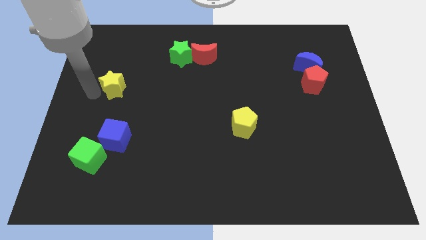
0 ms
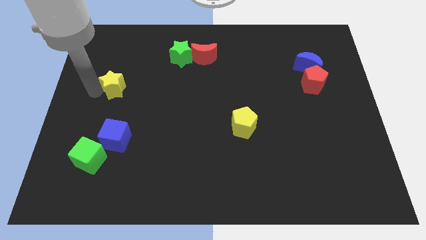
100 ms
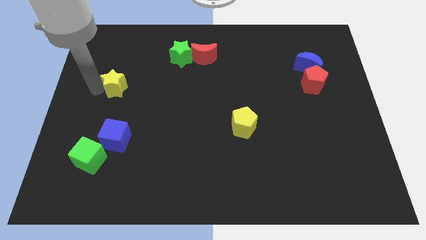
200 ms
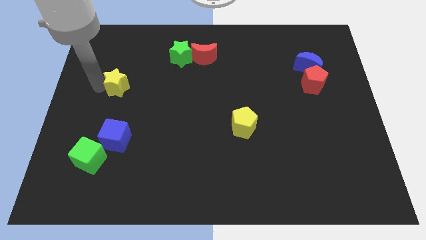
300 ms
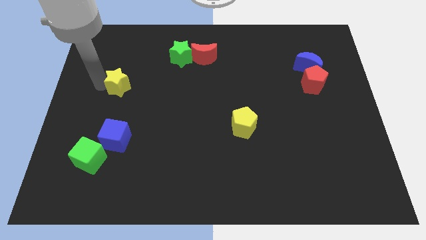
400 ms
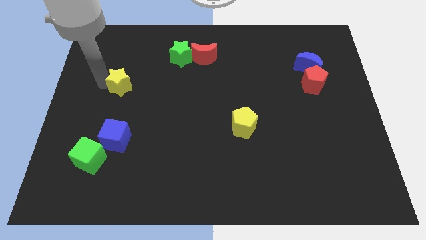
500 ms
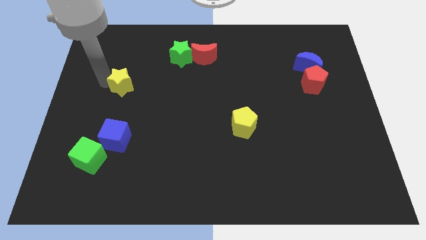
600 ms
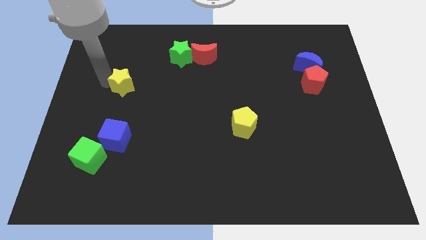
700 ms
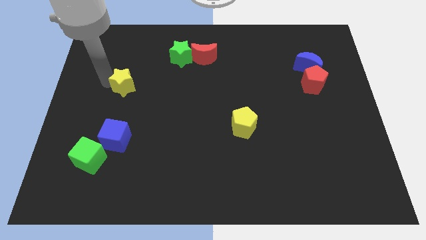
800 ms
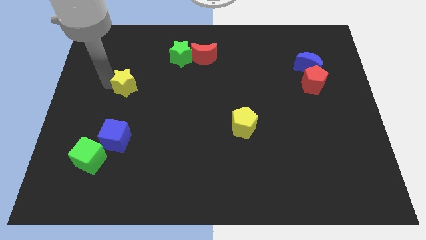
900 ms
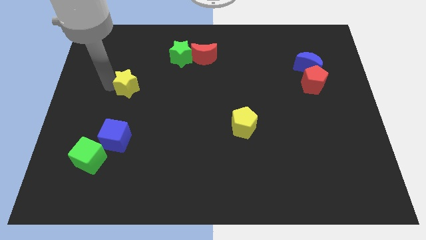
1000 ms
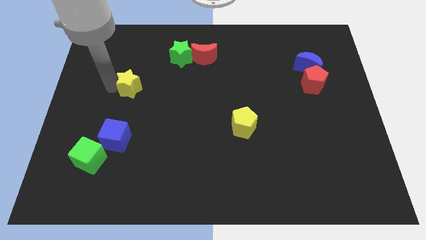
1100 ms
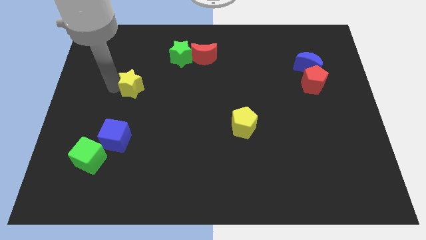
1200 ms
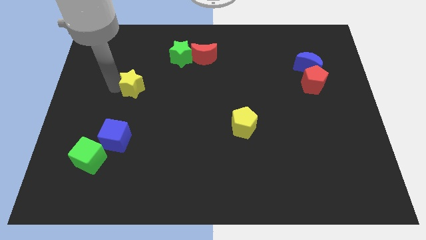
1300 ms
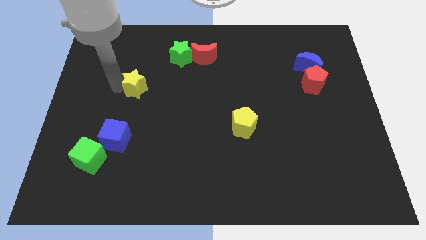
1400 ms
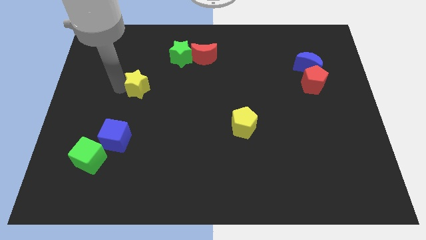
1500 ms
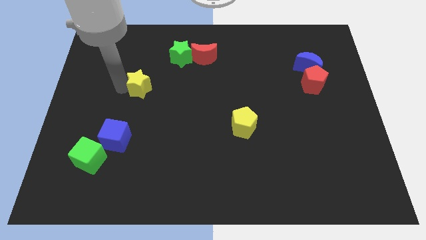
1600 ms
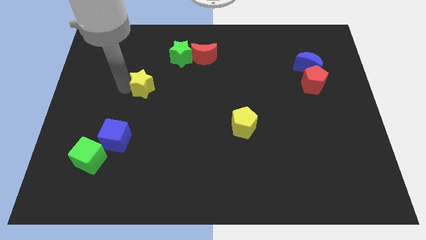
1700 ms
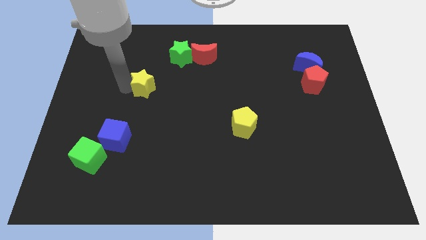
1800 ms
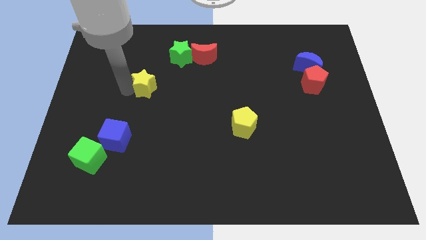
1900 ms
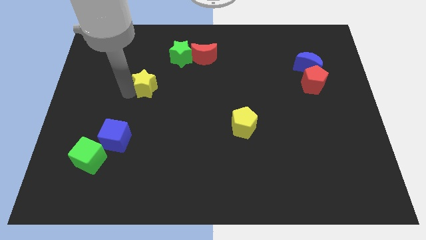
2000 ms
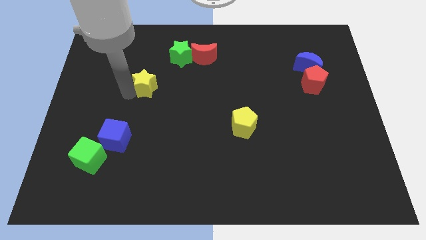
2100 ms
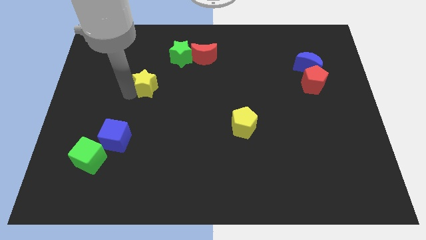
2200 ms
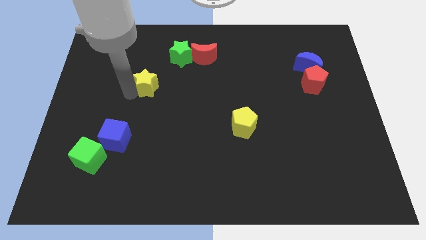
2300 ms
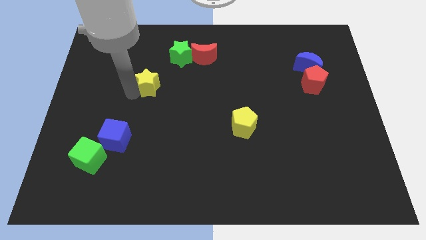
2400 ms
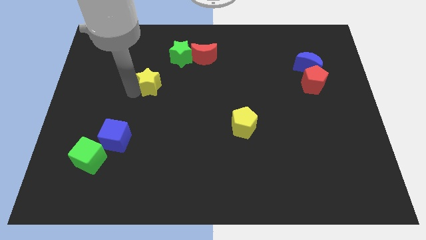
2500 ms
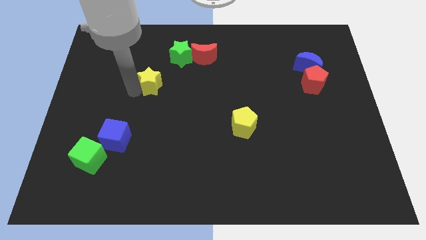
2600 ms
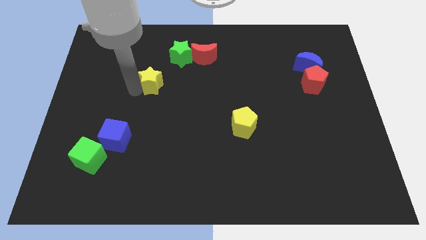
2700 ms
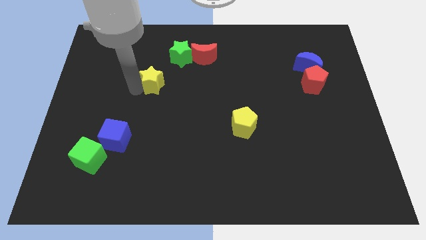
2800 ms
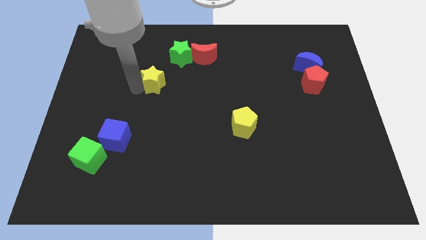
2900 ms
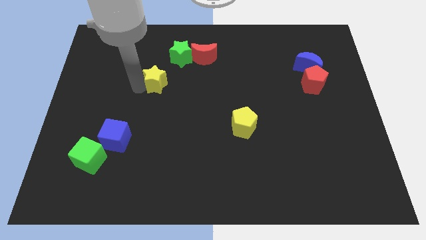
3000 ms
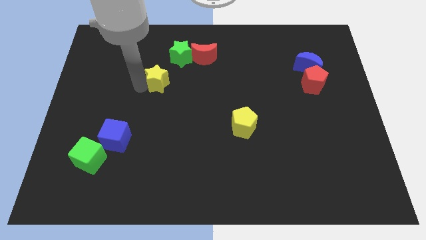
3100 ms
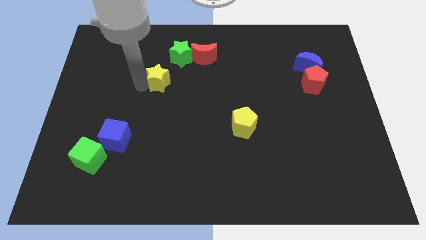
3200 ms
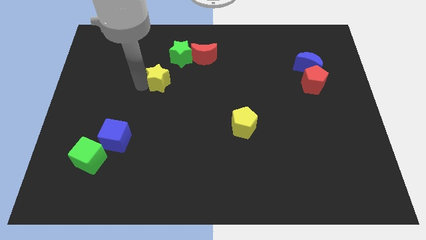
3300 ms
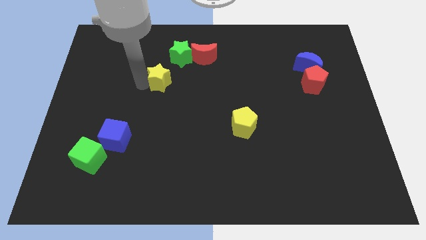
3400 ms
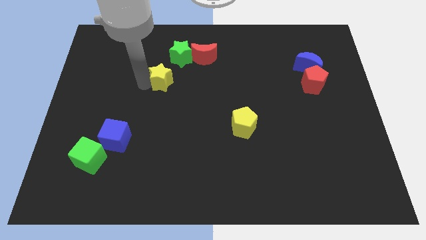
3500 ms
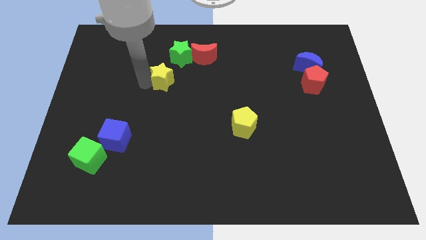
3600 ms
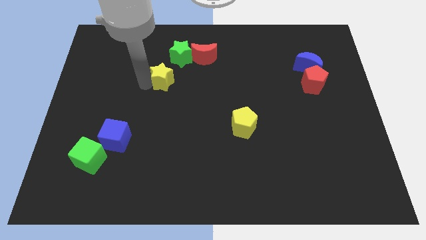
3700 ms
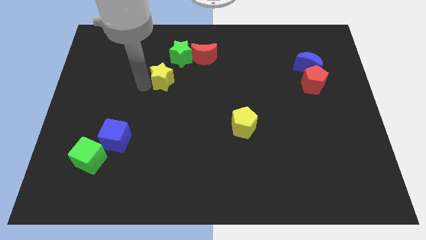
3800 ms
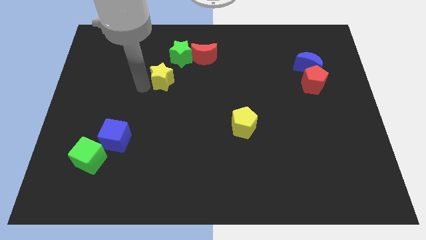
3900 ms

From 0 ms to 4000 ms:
place the yellow star below the green star

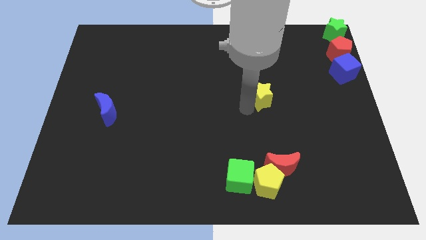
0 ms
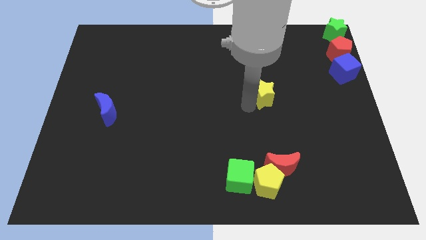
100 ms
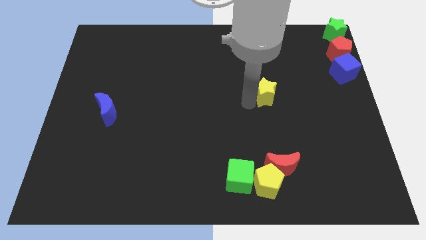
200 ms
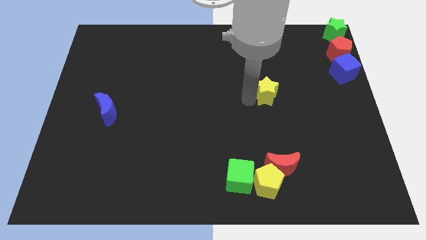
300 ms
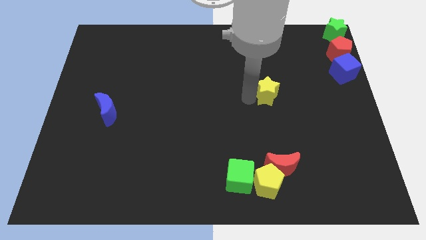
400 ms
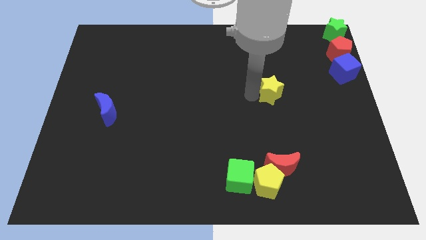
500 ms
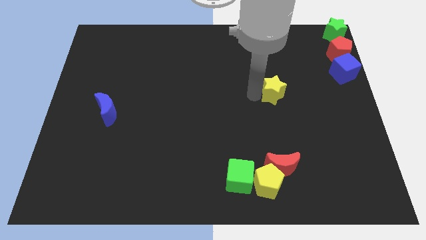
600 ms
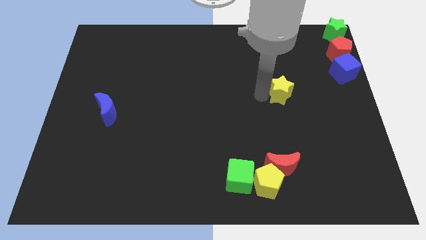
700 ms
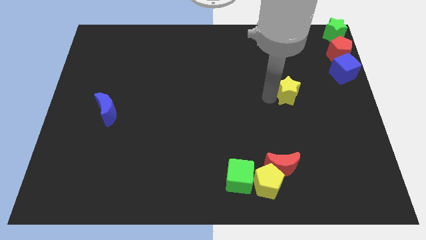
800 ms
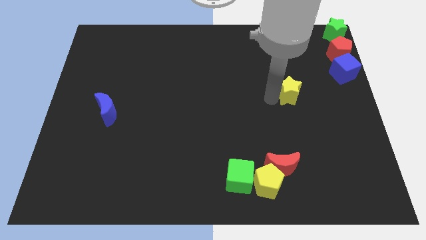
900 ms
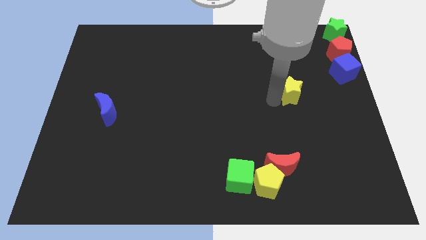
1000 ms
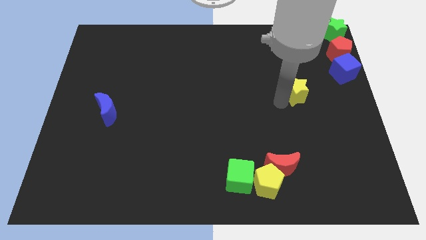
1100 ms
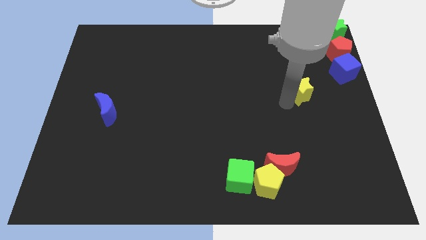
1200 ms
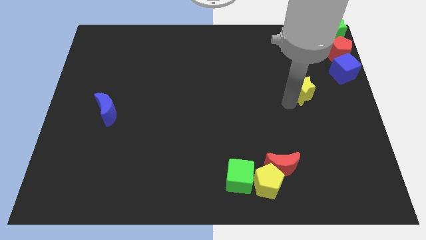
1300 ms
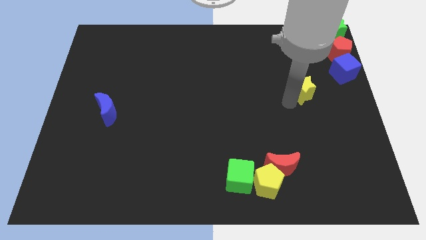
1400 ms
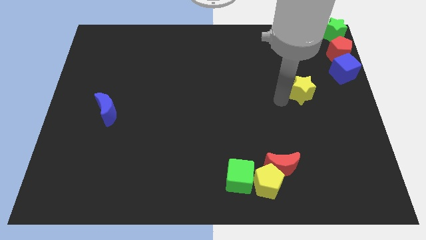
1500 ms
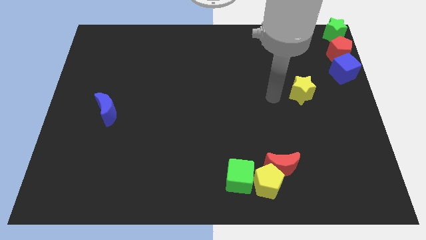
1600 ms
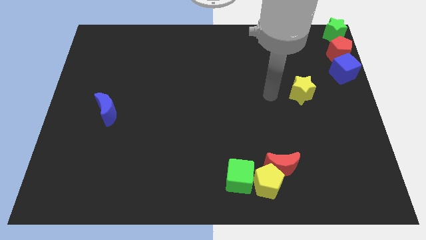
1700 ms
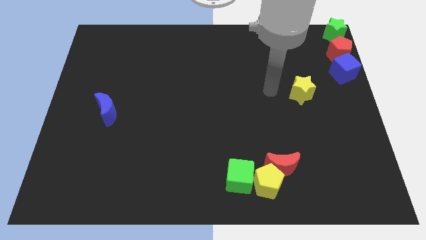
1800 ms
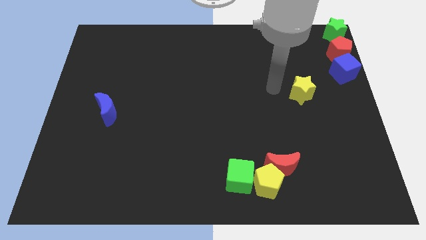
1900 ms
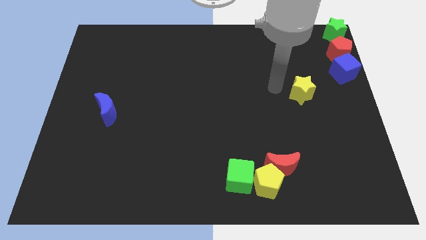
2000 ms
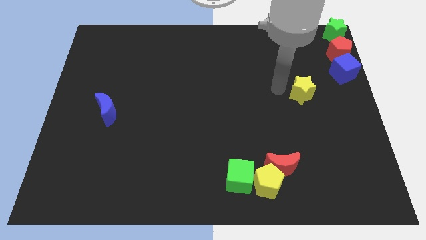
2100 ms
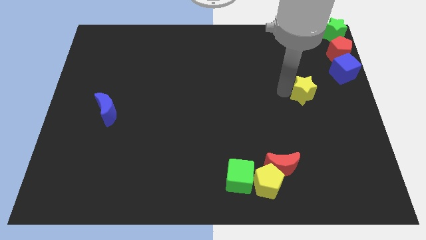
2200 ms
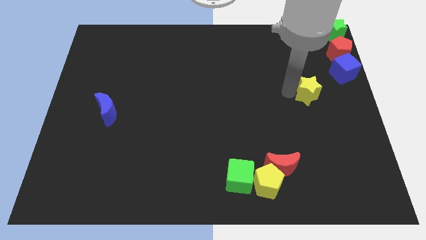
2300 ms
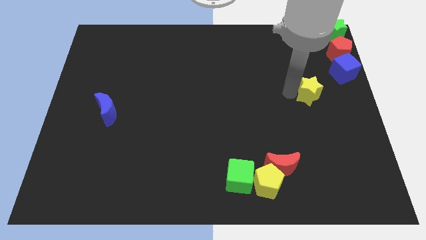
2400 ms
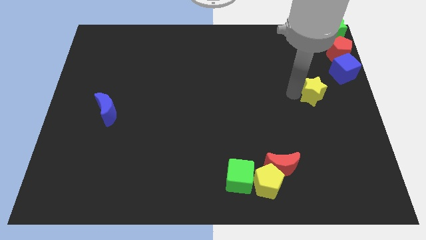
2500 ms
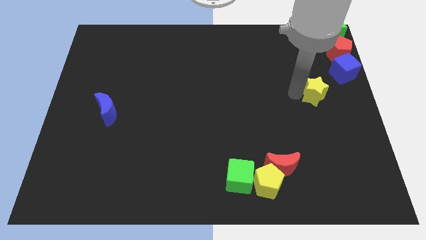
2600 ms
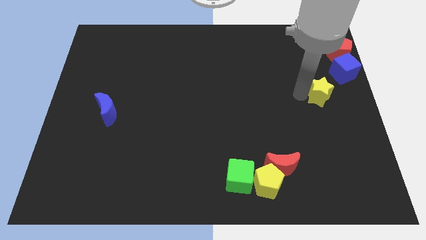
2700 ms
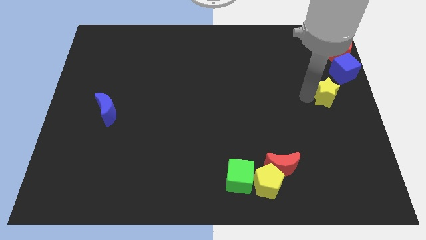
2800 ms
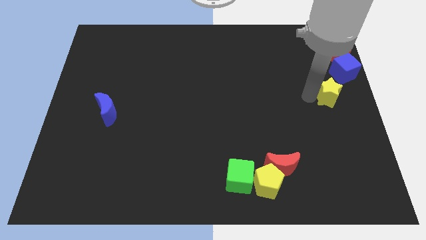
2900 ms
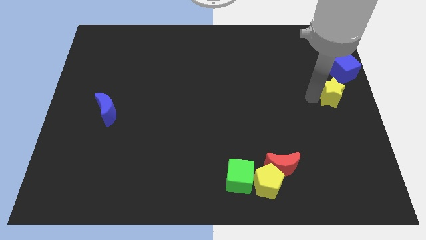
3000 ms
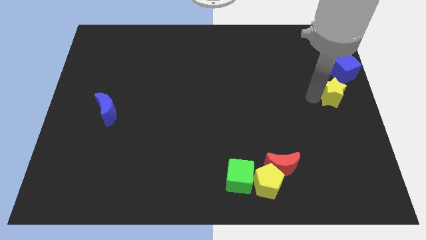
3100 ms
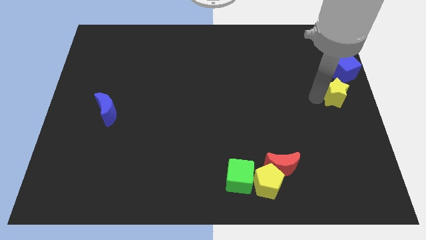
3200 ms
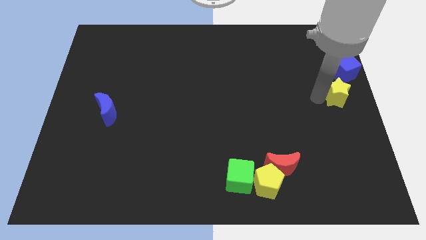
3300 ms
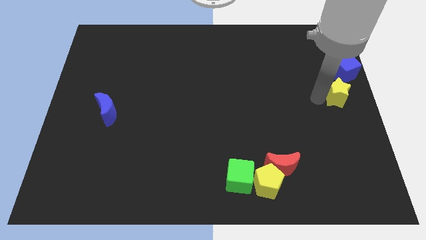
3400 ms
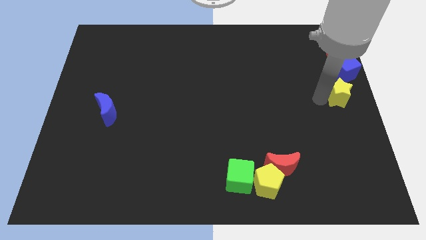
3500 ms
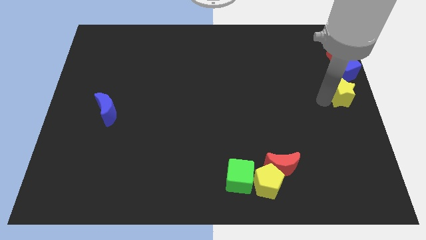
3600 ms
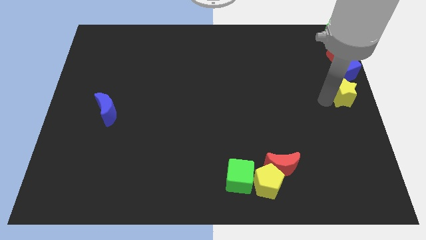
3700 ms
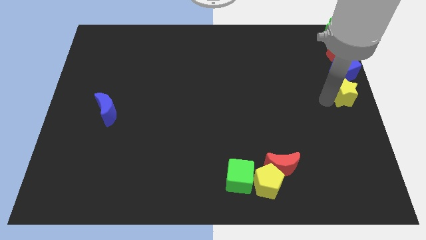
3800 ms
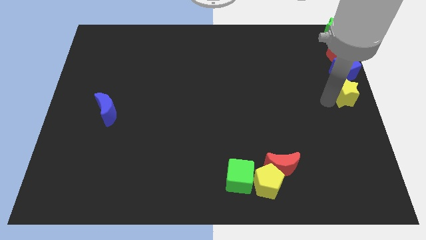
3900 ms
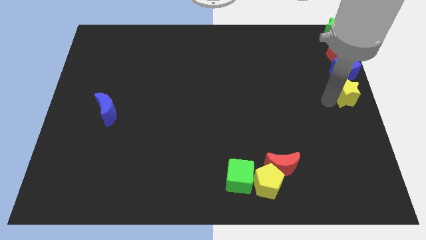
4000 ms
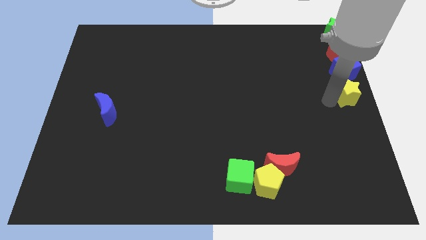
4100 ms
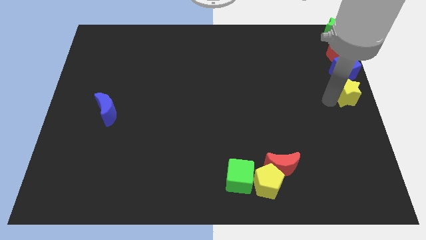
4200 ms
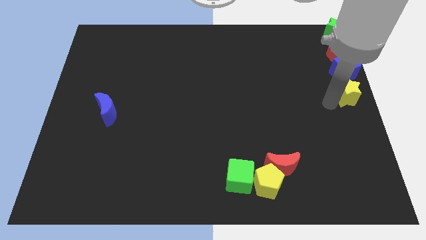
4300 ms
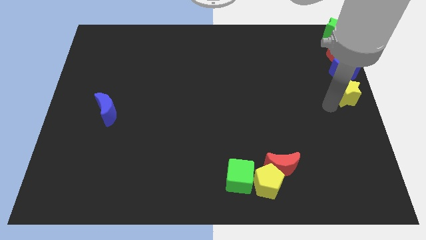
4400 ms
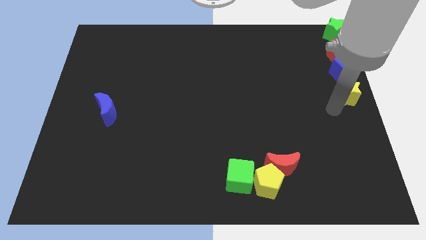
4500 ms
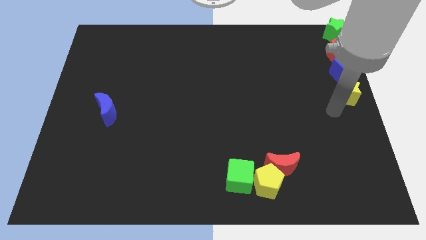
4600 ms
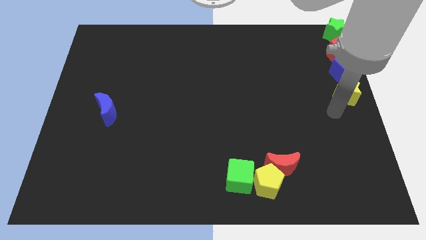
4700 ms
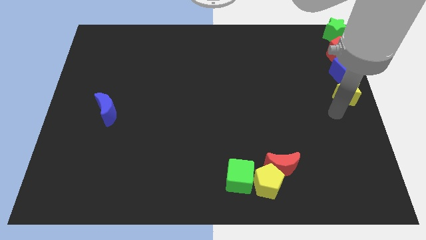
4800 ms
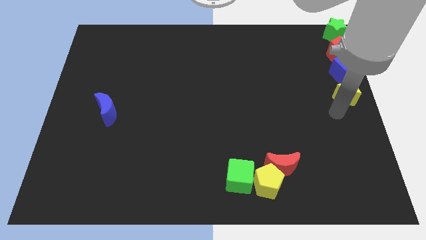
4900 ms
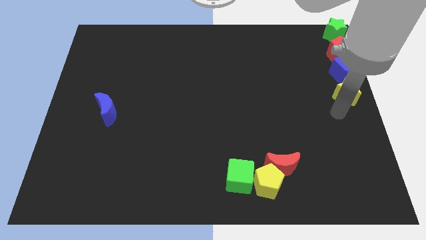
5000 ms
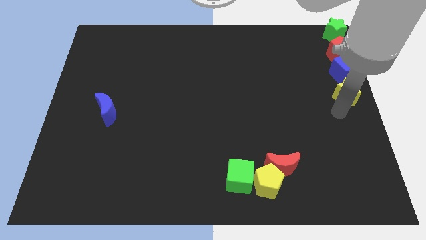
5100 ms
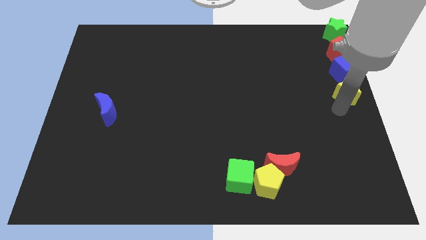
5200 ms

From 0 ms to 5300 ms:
place the yellow star below the blue cube to form a vertical line
